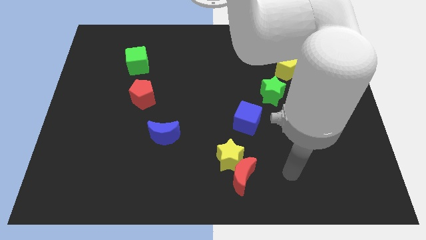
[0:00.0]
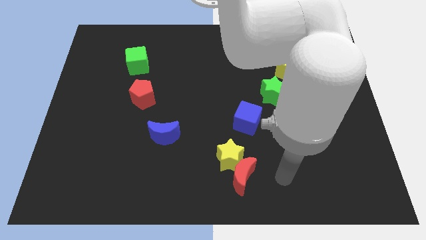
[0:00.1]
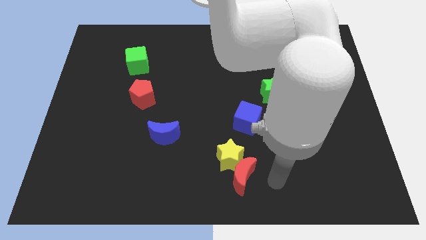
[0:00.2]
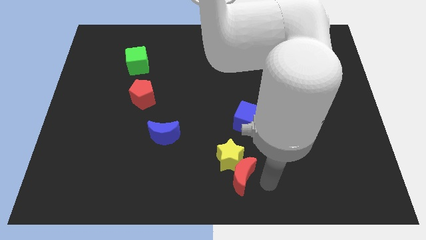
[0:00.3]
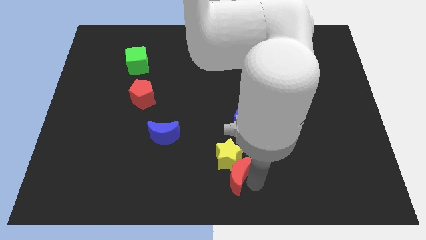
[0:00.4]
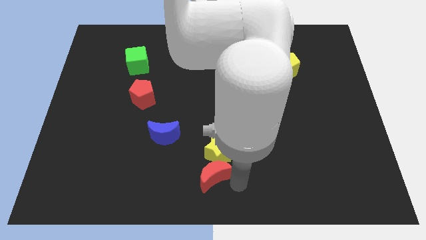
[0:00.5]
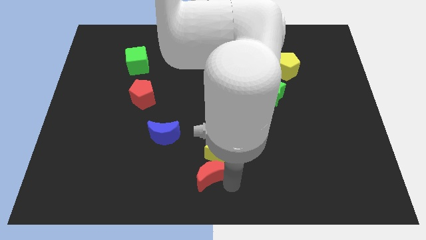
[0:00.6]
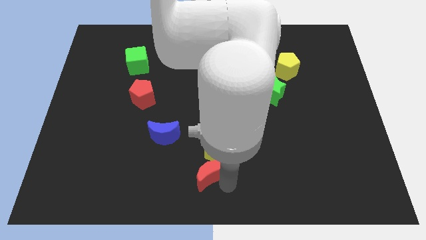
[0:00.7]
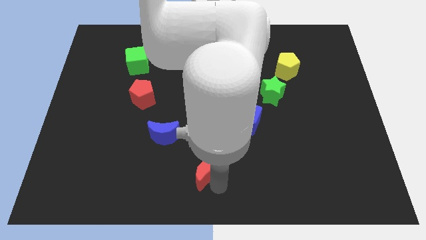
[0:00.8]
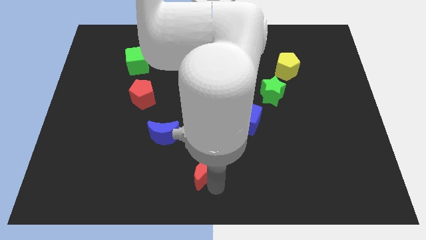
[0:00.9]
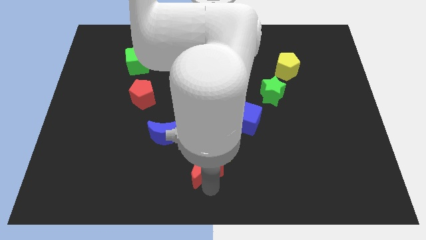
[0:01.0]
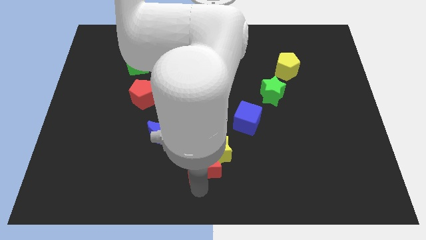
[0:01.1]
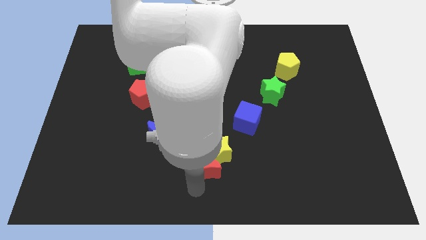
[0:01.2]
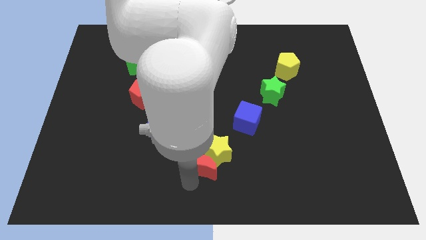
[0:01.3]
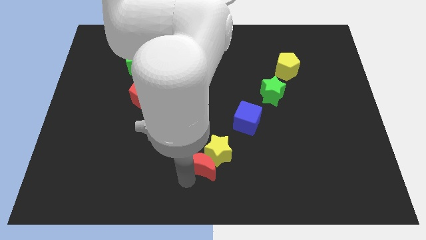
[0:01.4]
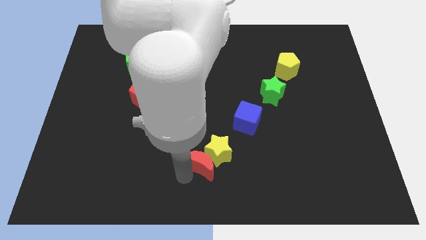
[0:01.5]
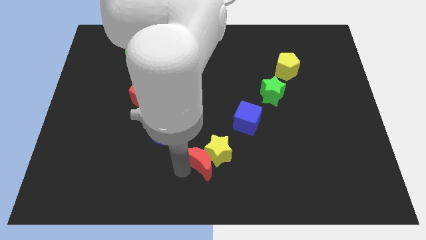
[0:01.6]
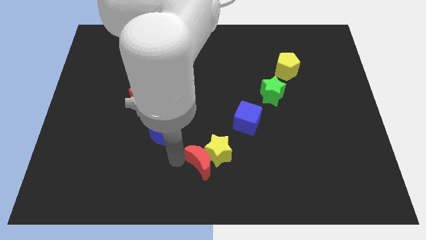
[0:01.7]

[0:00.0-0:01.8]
push the red crescent into the yellow star

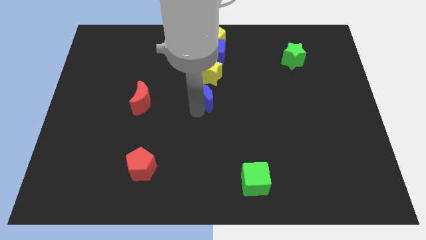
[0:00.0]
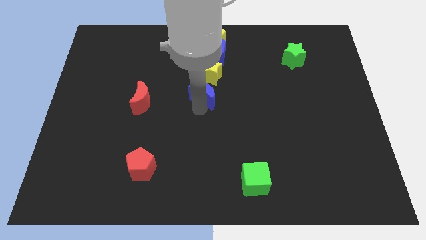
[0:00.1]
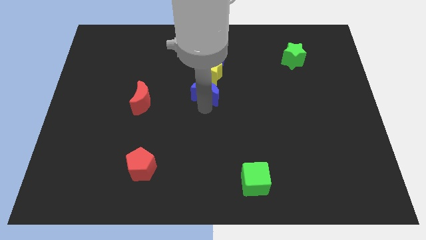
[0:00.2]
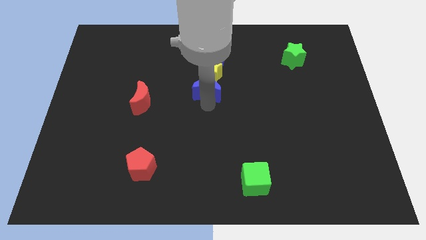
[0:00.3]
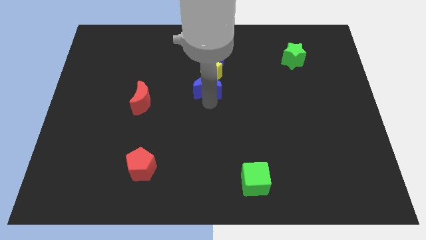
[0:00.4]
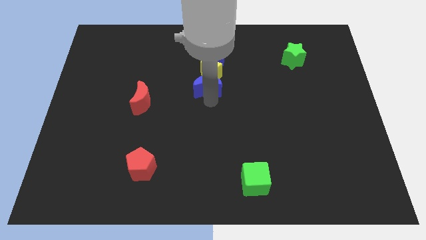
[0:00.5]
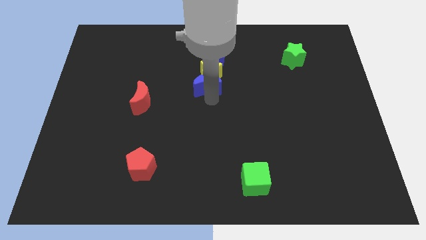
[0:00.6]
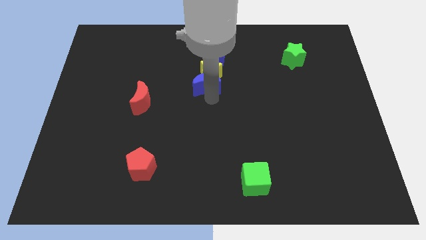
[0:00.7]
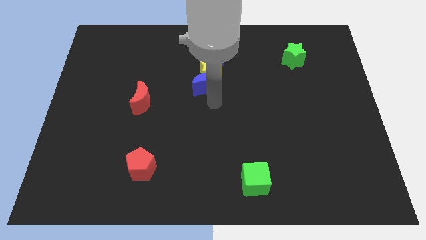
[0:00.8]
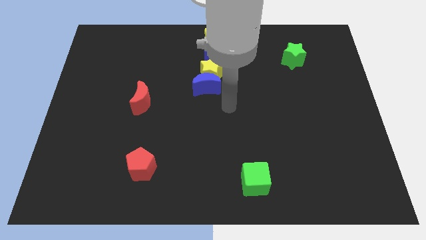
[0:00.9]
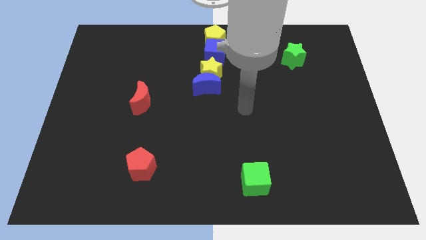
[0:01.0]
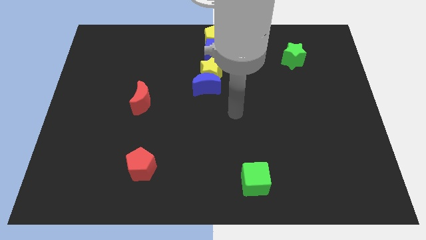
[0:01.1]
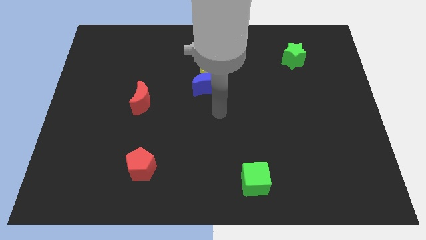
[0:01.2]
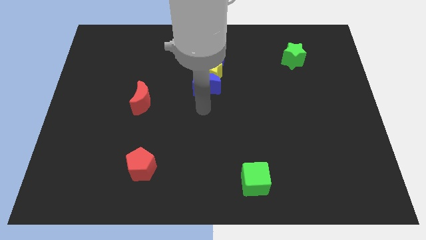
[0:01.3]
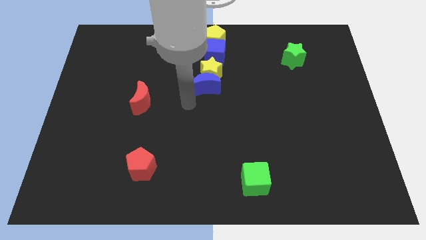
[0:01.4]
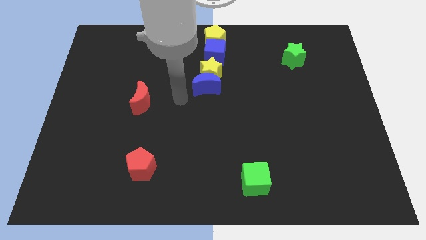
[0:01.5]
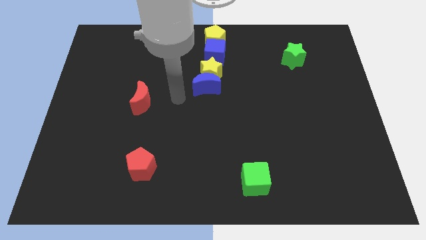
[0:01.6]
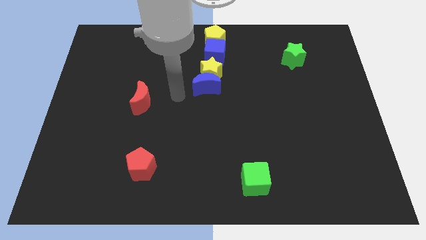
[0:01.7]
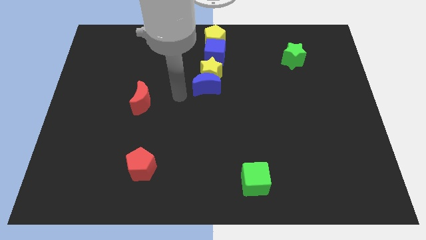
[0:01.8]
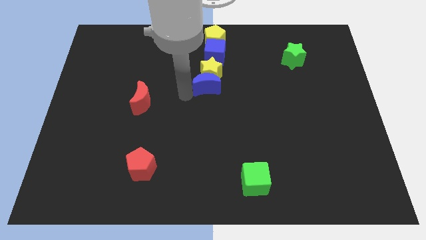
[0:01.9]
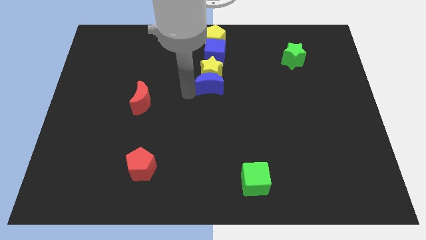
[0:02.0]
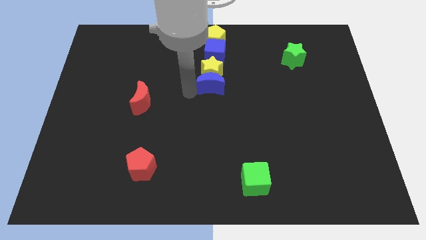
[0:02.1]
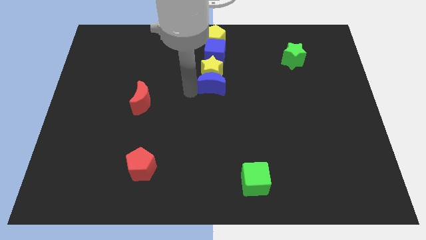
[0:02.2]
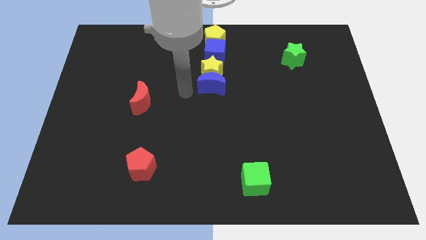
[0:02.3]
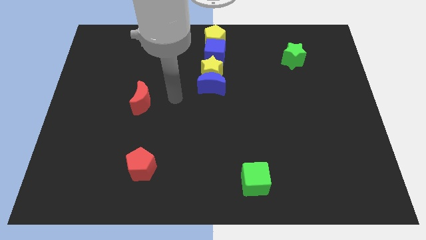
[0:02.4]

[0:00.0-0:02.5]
adjust the blue moon vertically below the yellow star

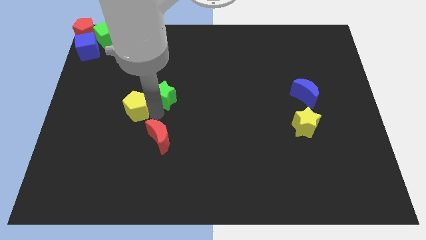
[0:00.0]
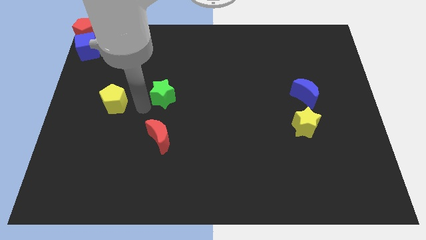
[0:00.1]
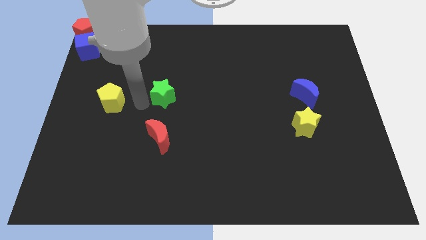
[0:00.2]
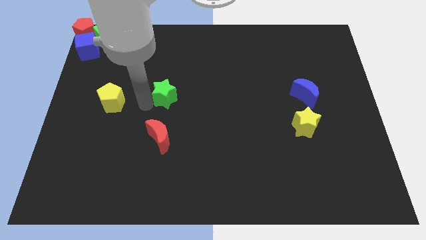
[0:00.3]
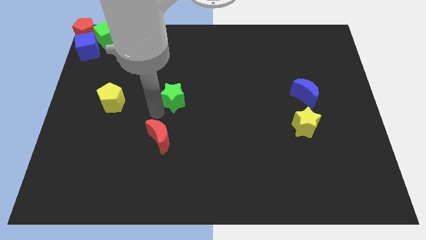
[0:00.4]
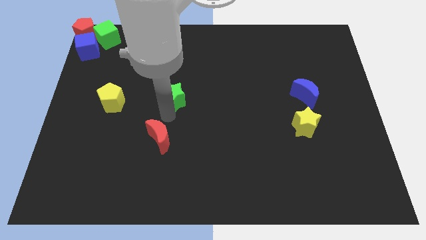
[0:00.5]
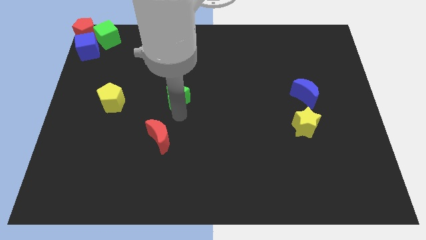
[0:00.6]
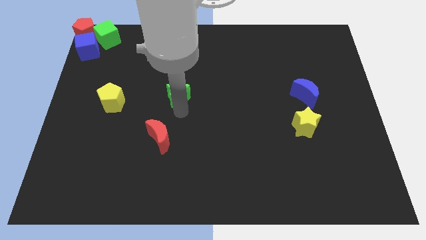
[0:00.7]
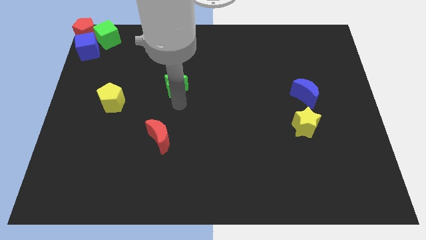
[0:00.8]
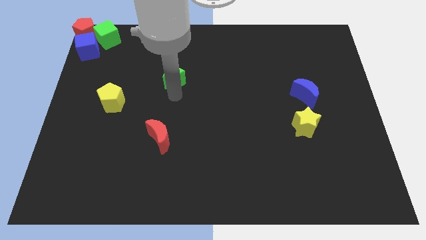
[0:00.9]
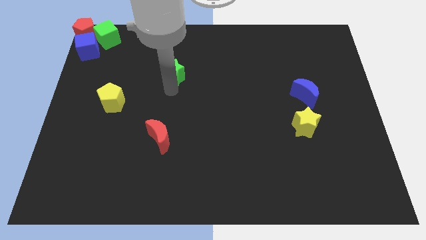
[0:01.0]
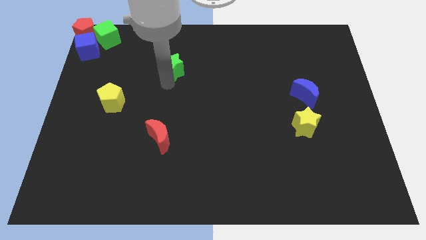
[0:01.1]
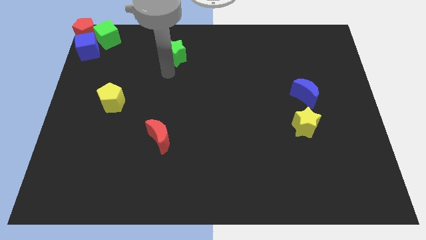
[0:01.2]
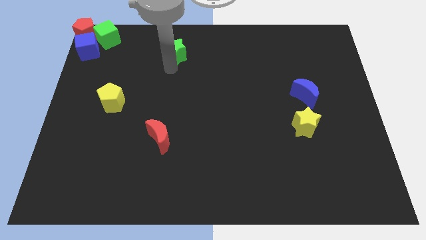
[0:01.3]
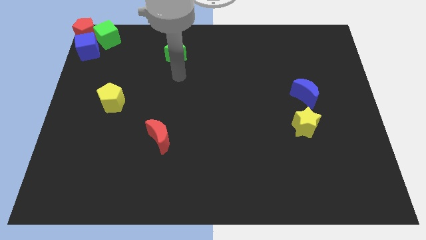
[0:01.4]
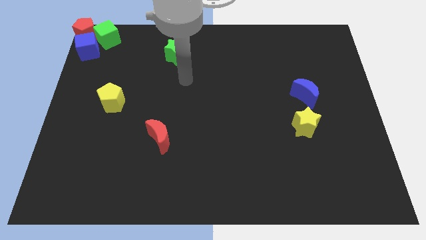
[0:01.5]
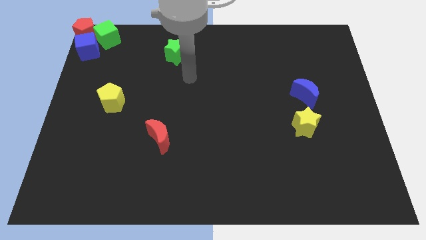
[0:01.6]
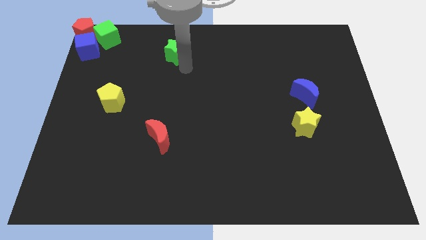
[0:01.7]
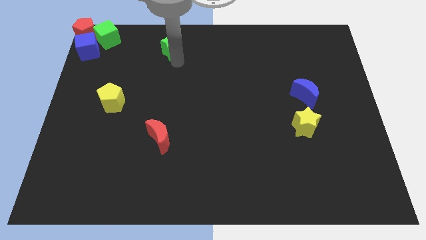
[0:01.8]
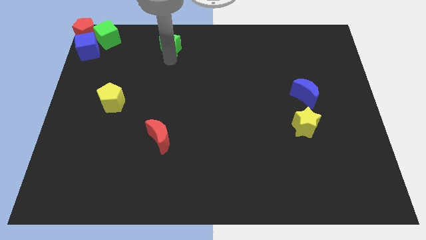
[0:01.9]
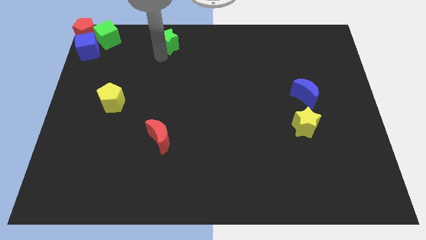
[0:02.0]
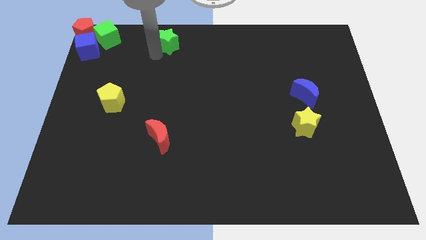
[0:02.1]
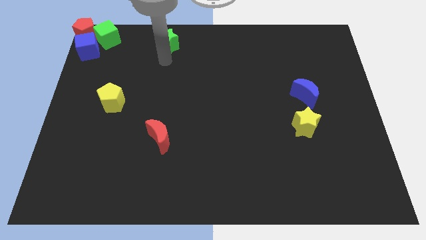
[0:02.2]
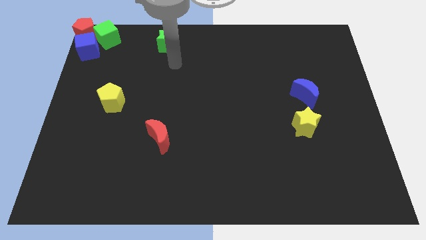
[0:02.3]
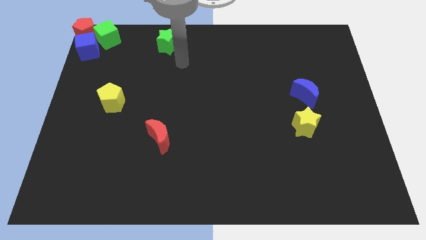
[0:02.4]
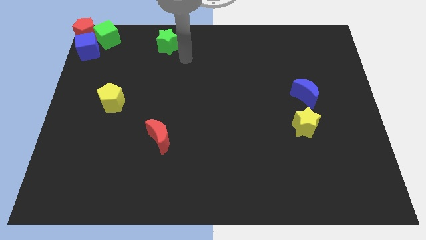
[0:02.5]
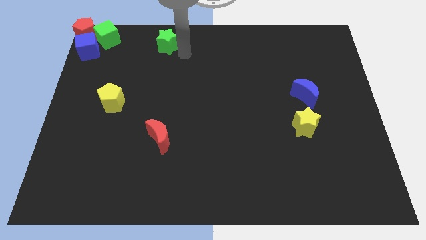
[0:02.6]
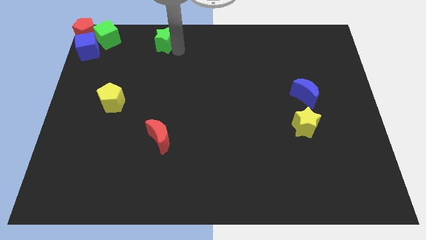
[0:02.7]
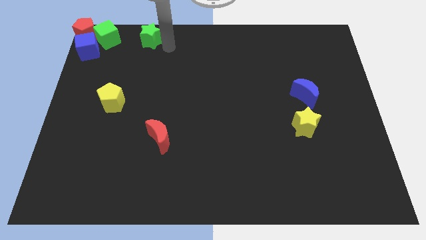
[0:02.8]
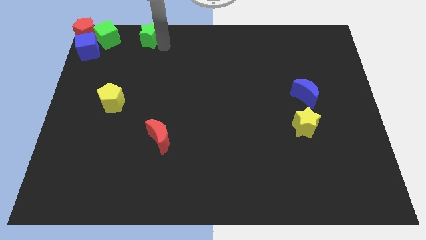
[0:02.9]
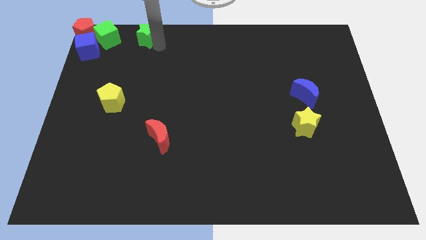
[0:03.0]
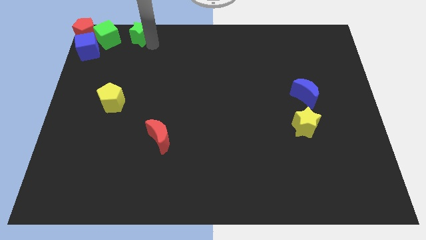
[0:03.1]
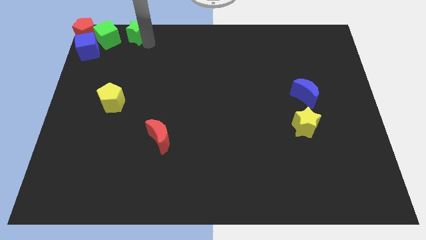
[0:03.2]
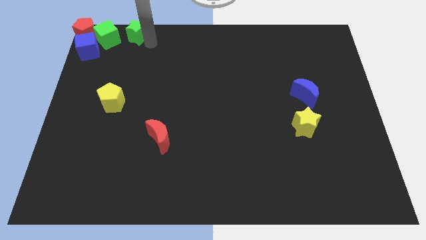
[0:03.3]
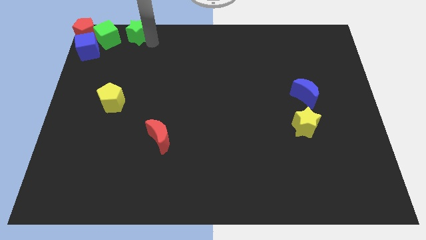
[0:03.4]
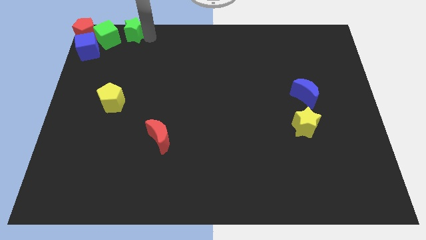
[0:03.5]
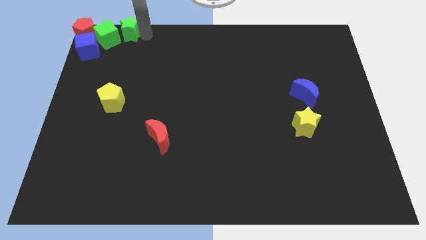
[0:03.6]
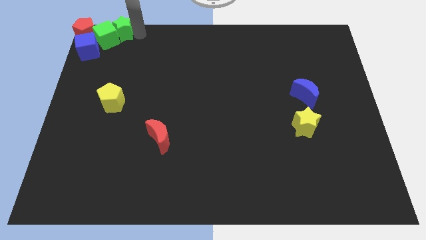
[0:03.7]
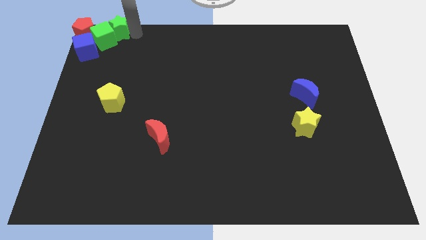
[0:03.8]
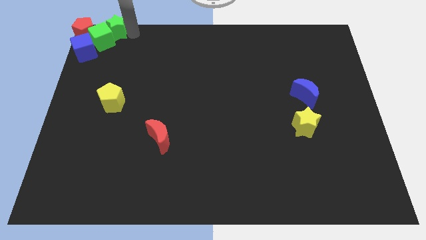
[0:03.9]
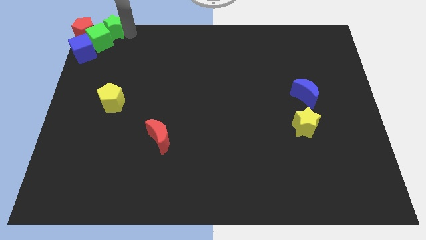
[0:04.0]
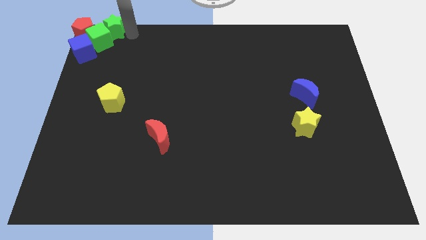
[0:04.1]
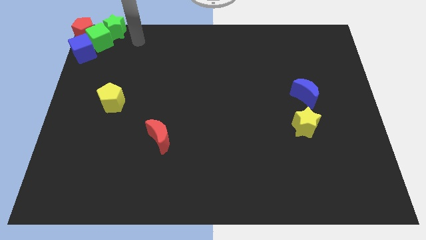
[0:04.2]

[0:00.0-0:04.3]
separate the yellow pentagon and green star

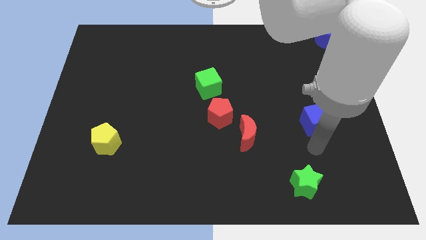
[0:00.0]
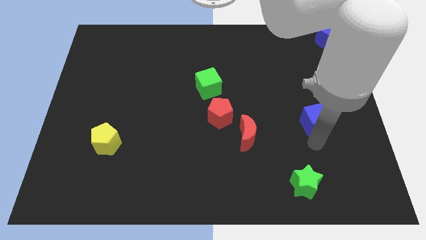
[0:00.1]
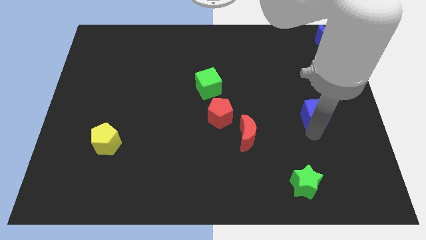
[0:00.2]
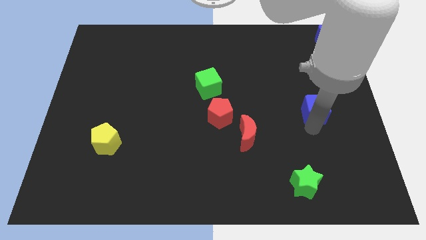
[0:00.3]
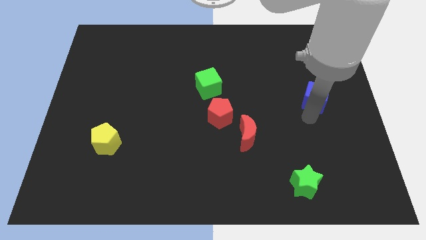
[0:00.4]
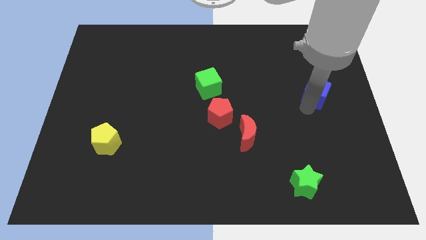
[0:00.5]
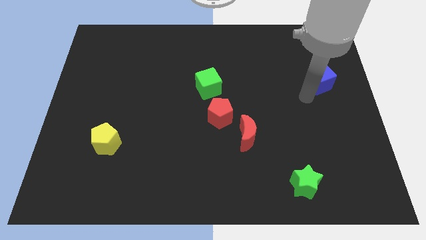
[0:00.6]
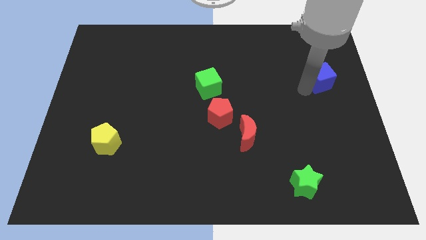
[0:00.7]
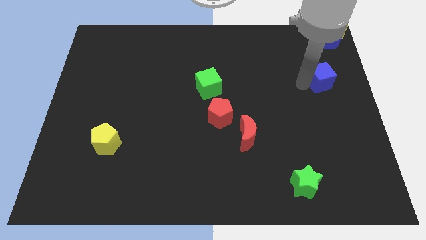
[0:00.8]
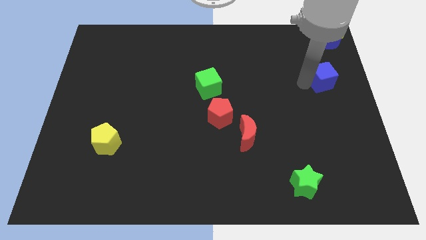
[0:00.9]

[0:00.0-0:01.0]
move blue cube diagonally right to the green star
